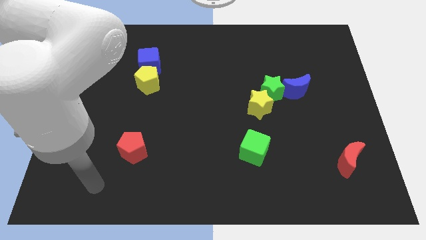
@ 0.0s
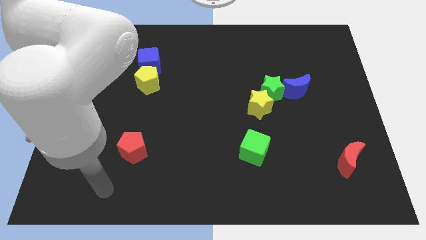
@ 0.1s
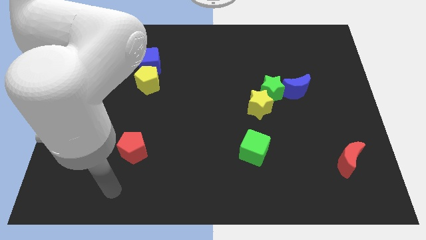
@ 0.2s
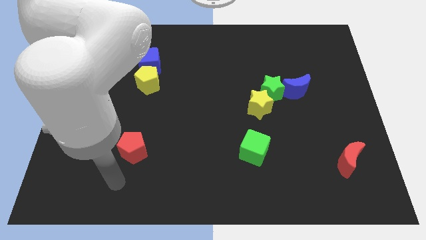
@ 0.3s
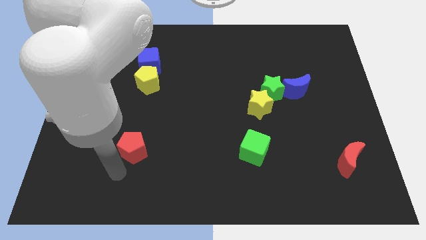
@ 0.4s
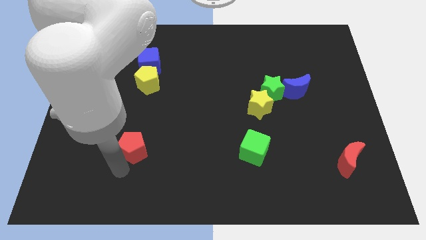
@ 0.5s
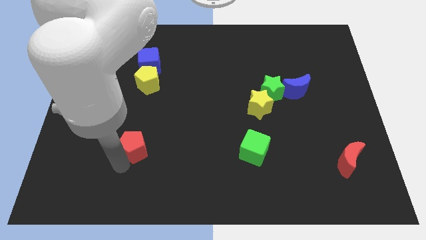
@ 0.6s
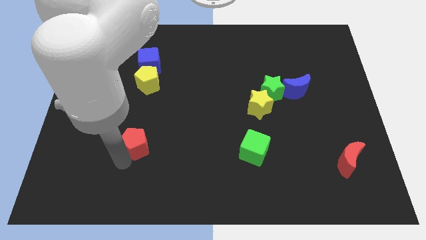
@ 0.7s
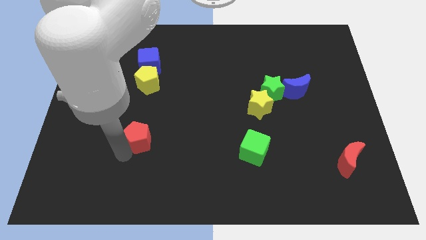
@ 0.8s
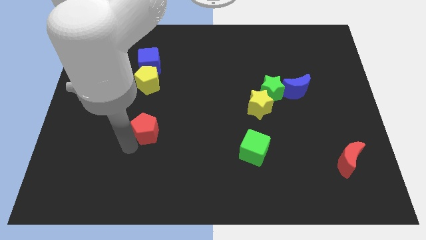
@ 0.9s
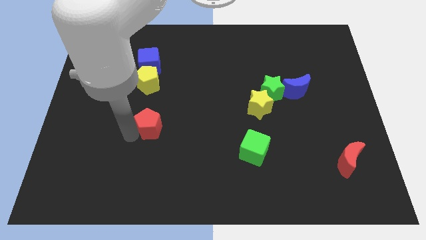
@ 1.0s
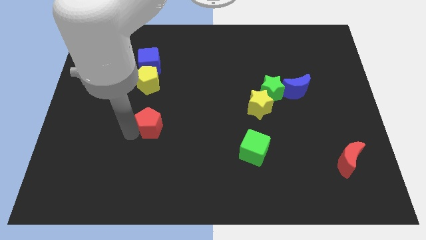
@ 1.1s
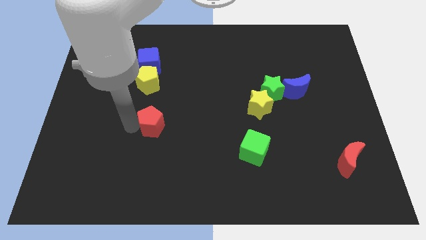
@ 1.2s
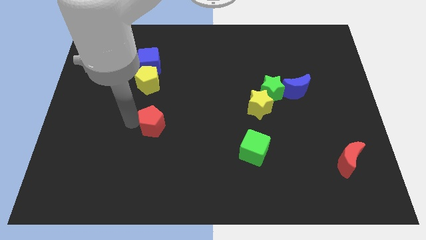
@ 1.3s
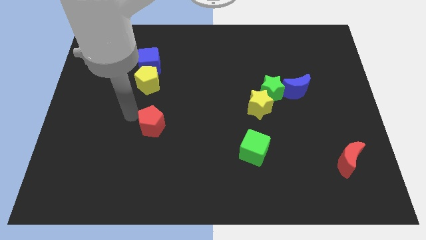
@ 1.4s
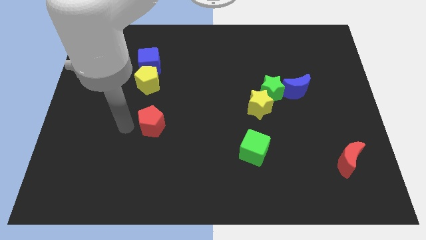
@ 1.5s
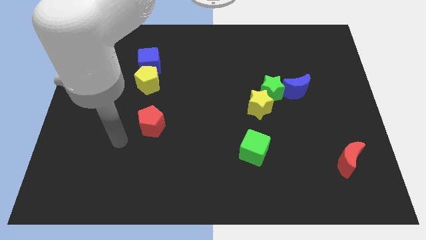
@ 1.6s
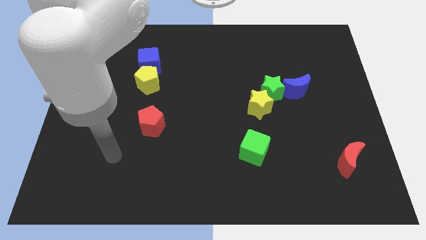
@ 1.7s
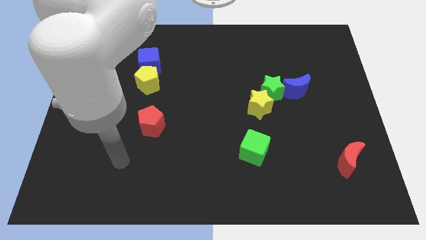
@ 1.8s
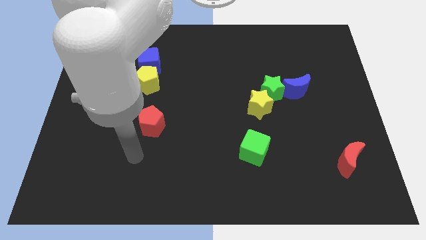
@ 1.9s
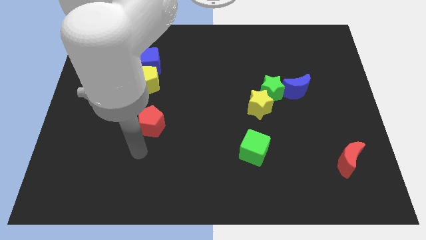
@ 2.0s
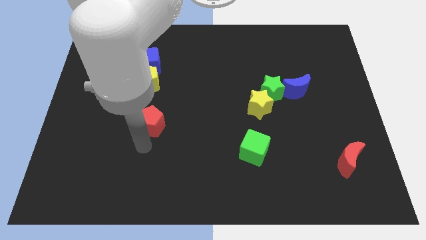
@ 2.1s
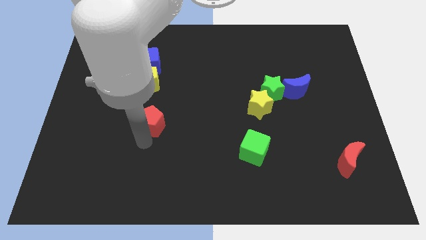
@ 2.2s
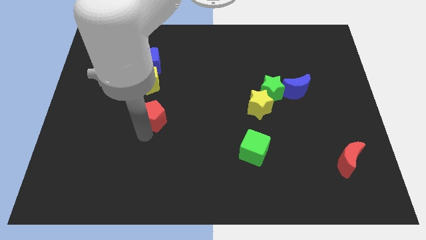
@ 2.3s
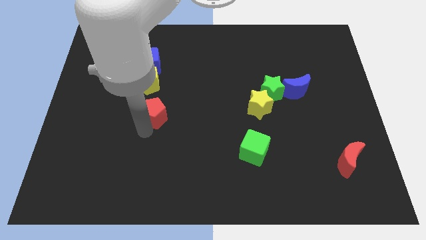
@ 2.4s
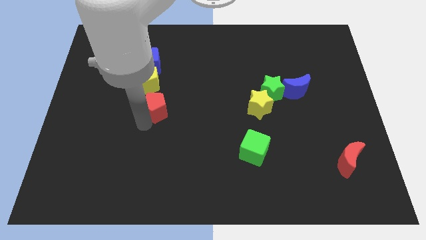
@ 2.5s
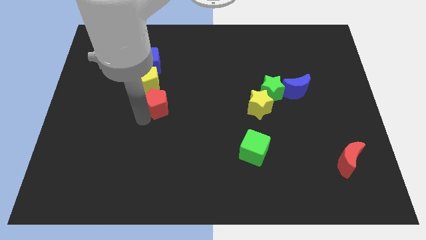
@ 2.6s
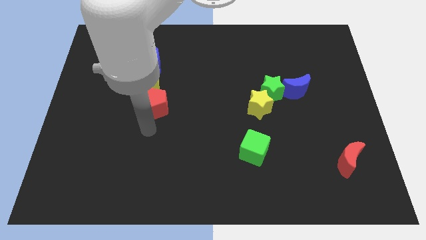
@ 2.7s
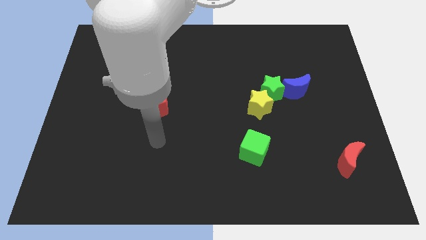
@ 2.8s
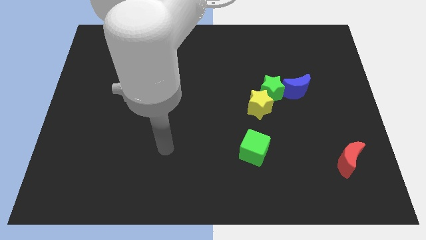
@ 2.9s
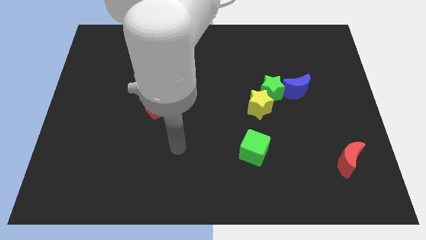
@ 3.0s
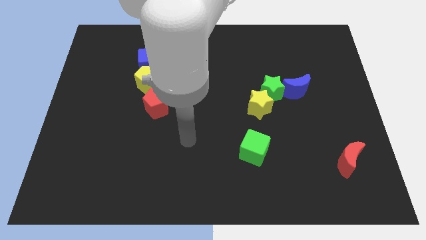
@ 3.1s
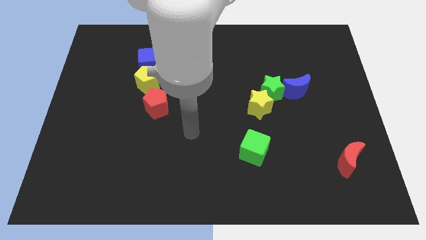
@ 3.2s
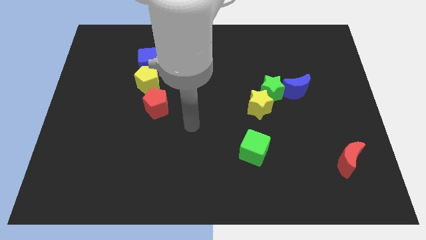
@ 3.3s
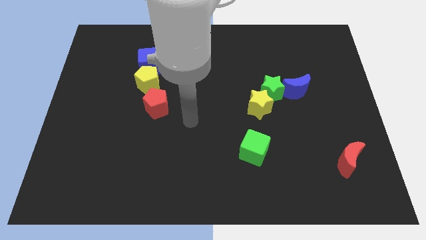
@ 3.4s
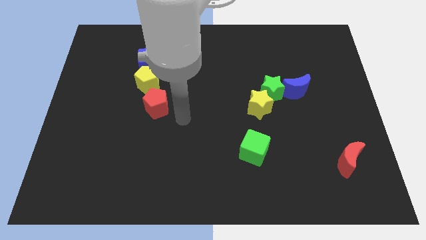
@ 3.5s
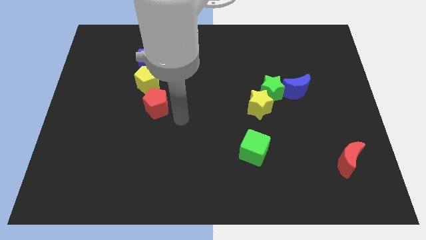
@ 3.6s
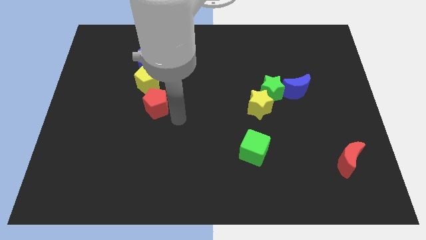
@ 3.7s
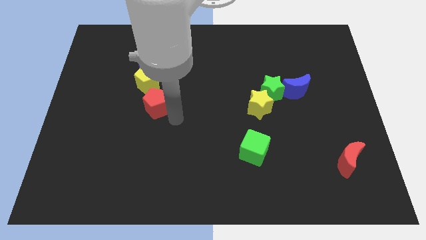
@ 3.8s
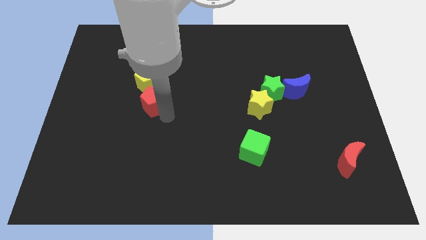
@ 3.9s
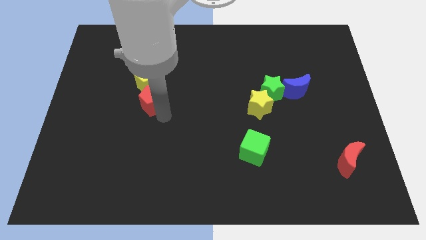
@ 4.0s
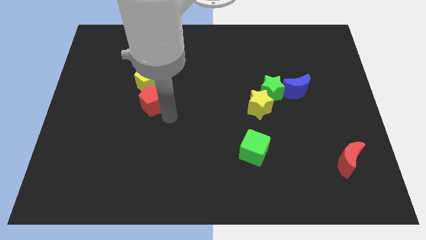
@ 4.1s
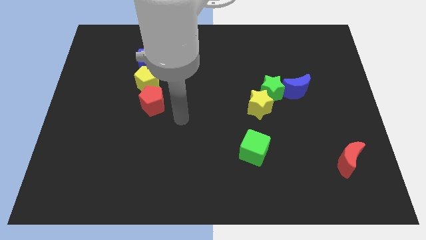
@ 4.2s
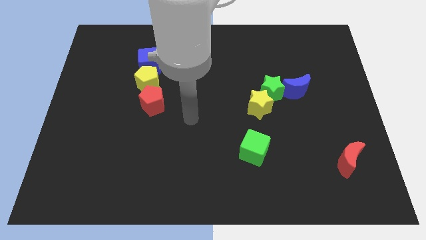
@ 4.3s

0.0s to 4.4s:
place the red pentagon bottom of the yellow pentagon

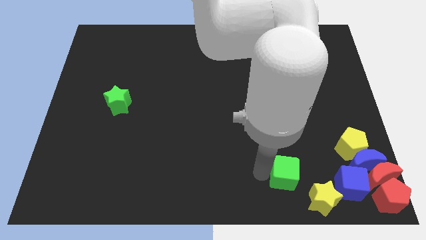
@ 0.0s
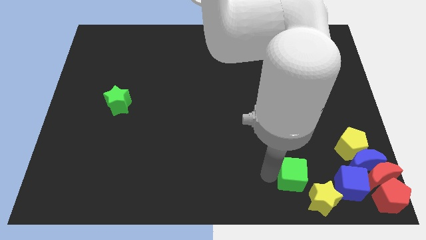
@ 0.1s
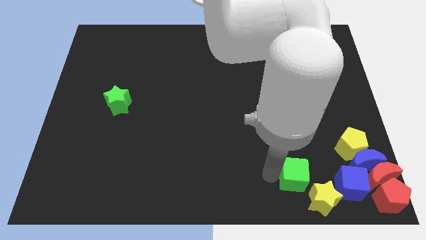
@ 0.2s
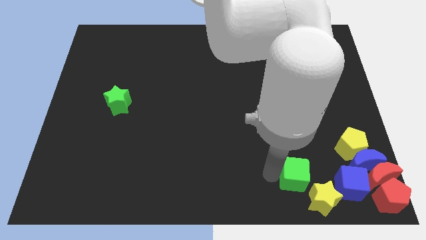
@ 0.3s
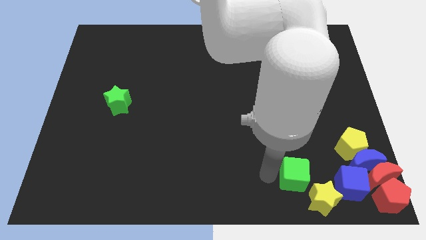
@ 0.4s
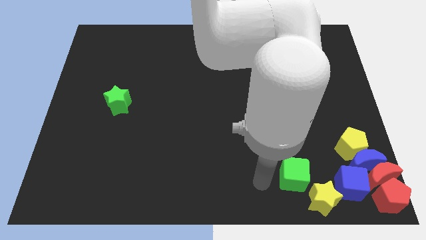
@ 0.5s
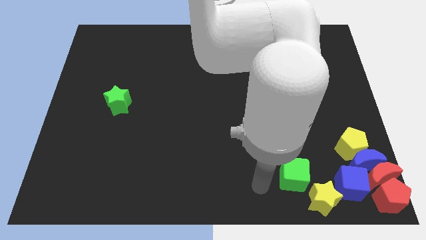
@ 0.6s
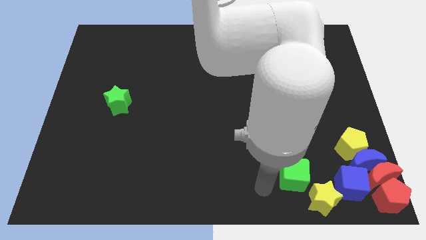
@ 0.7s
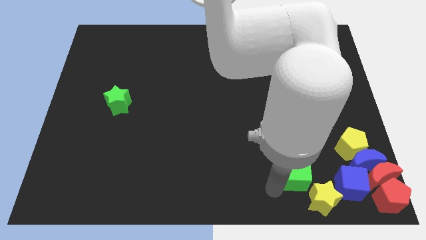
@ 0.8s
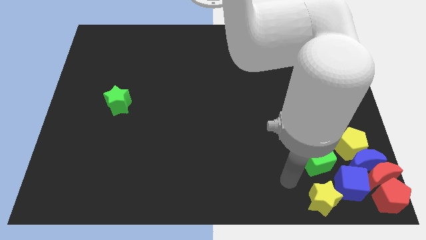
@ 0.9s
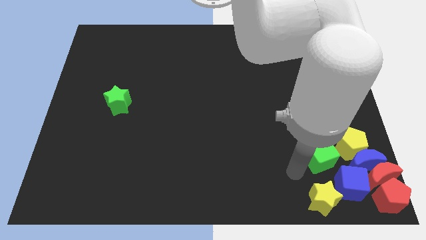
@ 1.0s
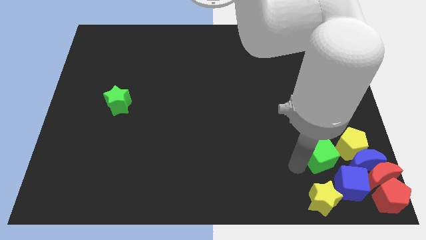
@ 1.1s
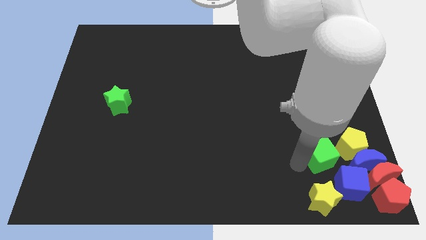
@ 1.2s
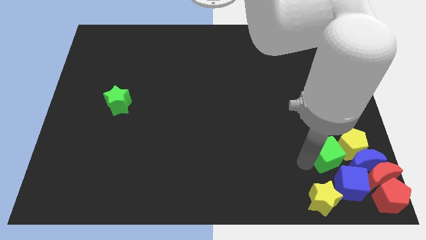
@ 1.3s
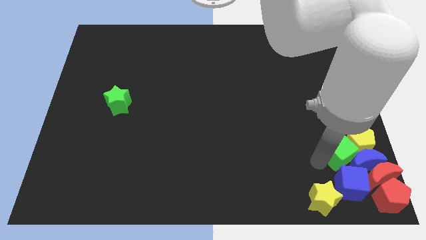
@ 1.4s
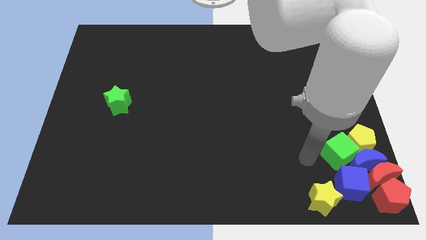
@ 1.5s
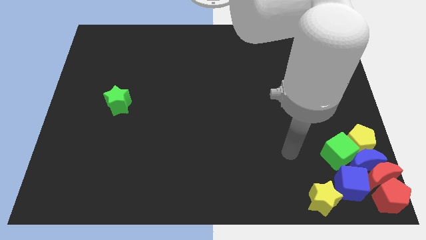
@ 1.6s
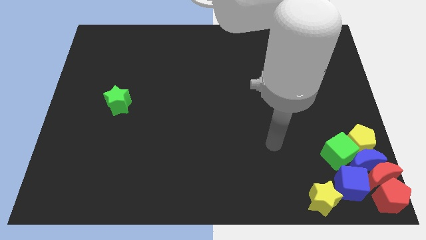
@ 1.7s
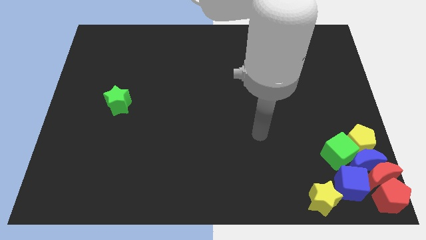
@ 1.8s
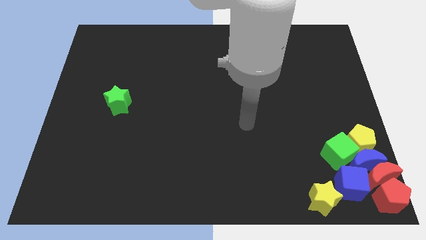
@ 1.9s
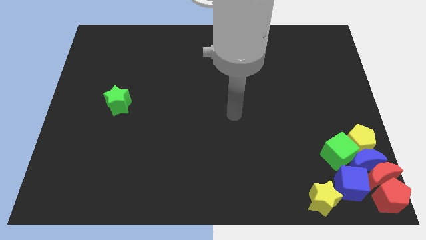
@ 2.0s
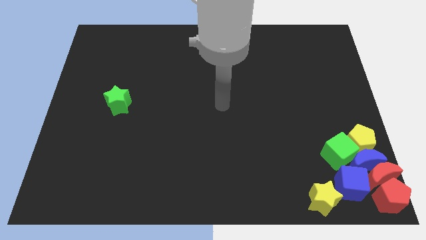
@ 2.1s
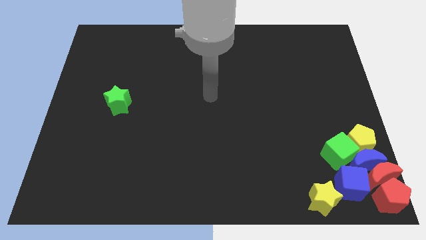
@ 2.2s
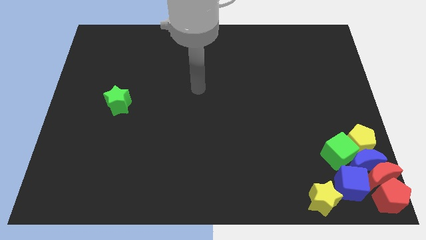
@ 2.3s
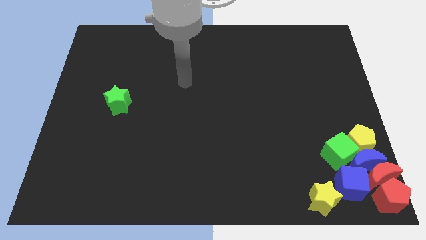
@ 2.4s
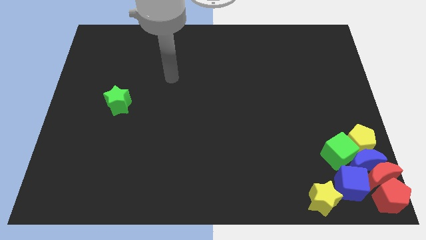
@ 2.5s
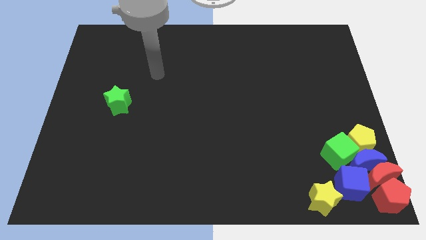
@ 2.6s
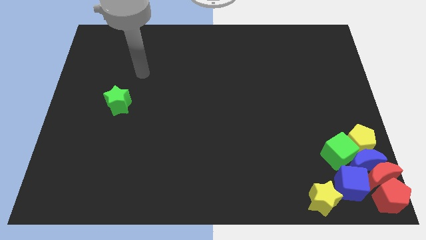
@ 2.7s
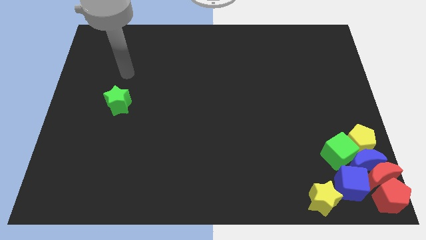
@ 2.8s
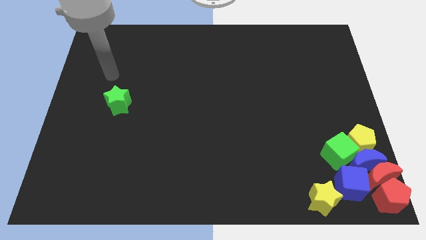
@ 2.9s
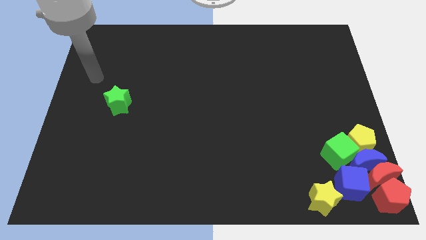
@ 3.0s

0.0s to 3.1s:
slide the green cube at the left bottom side of the yellow pentagon

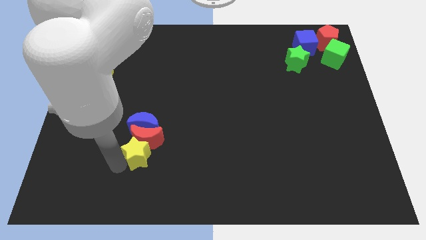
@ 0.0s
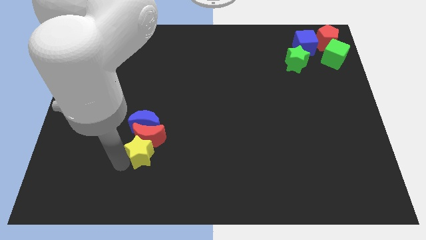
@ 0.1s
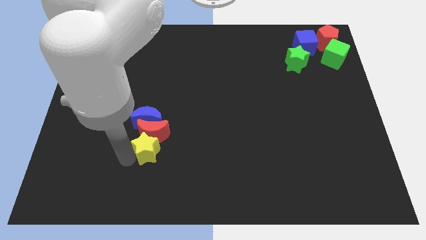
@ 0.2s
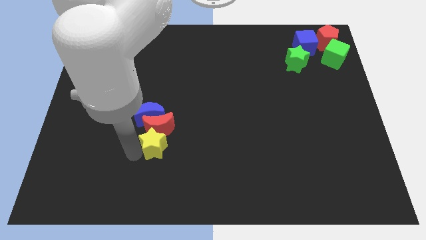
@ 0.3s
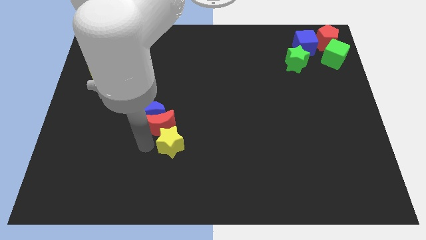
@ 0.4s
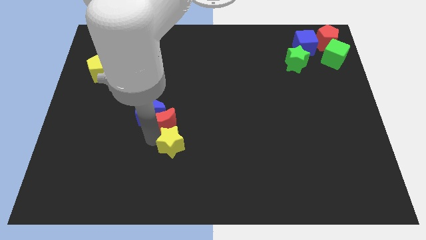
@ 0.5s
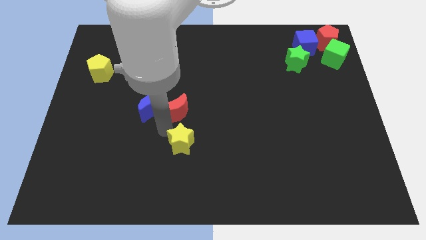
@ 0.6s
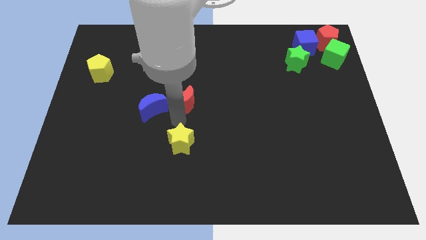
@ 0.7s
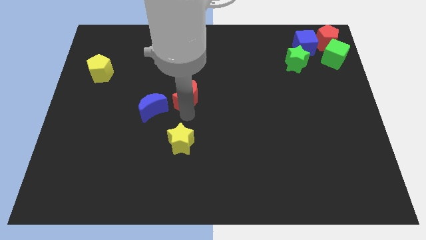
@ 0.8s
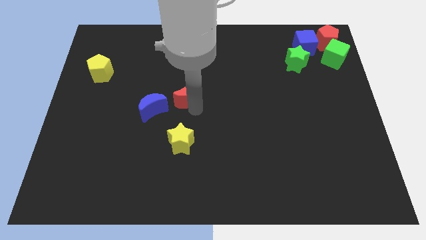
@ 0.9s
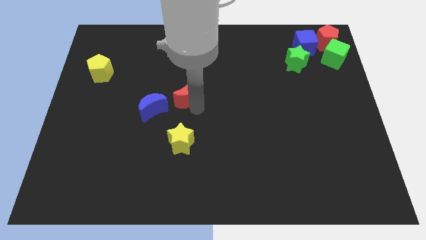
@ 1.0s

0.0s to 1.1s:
move red moon away from the blue moon

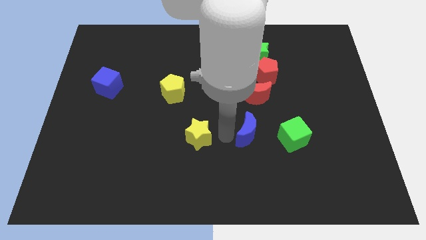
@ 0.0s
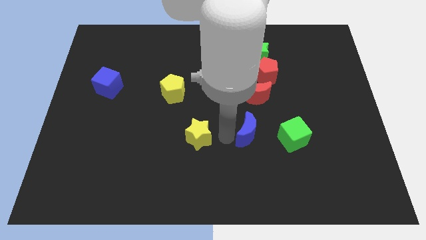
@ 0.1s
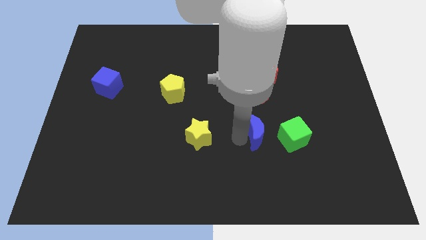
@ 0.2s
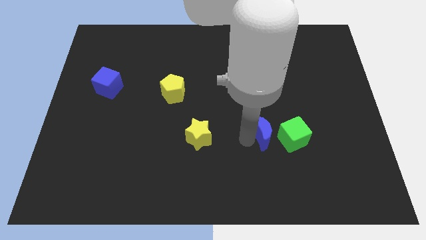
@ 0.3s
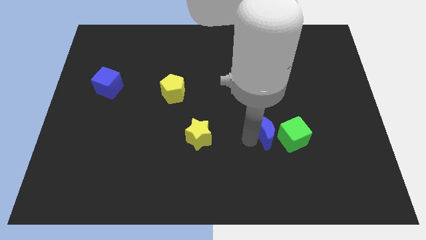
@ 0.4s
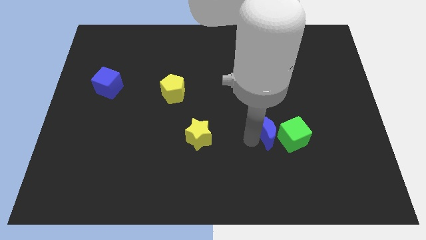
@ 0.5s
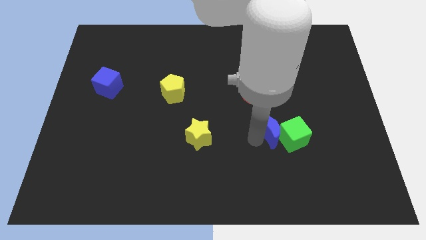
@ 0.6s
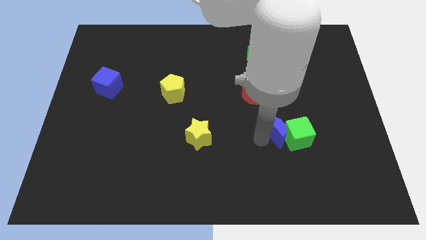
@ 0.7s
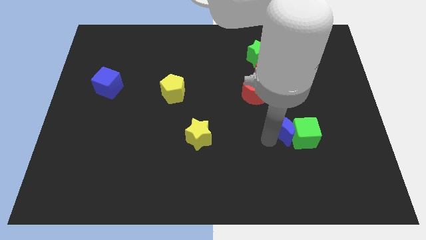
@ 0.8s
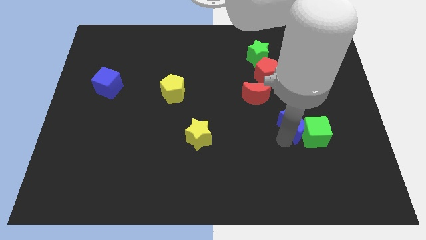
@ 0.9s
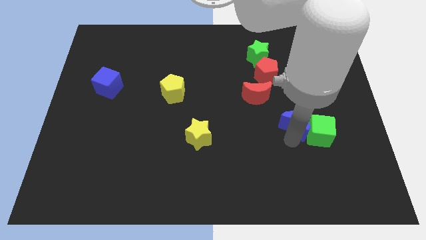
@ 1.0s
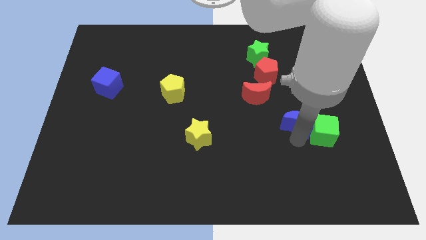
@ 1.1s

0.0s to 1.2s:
push the blue moon into the green cube
